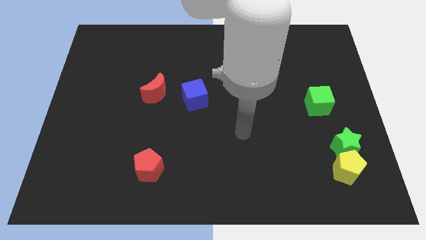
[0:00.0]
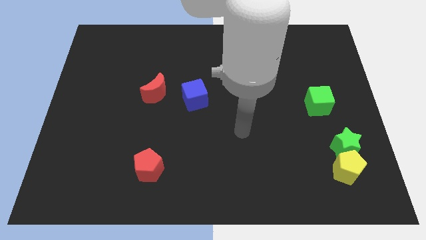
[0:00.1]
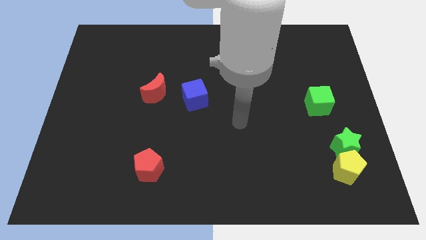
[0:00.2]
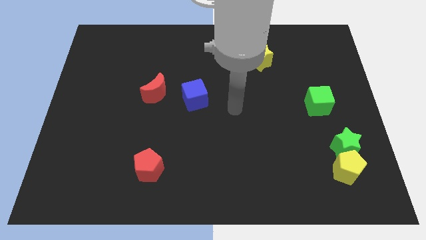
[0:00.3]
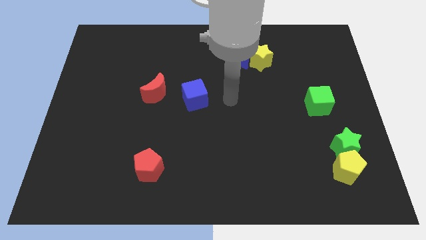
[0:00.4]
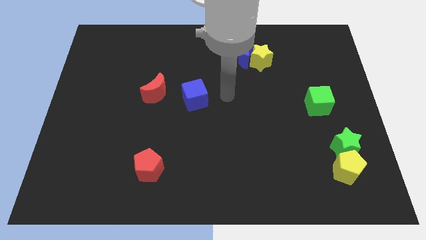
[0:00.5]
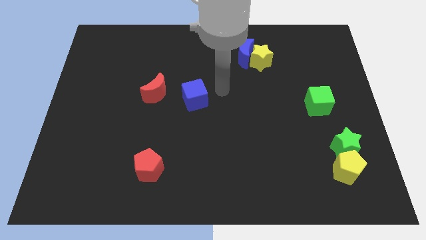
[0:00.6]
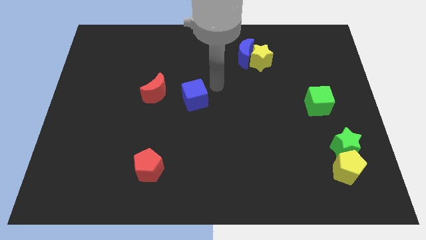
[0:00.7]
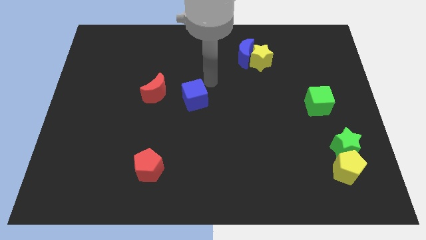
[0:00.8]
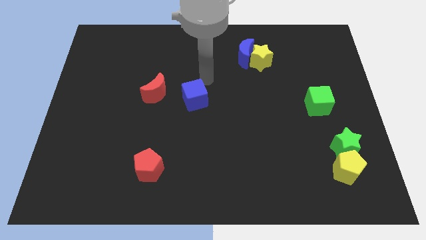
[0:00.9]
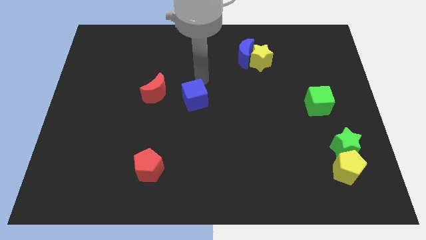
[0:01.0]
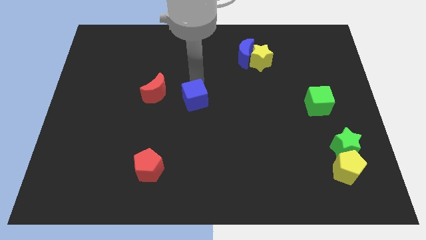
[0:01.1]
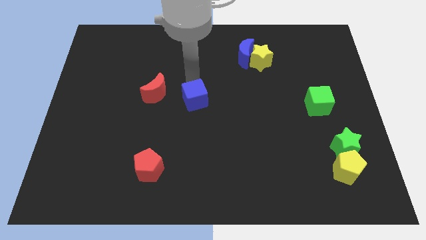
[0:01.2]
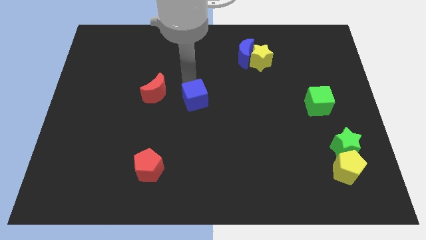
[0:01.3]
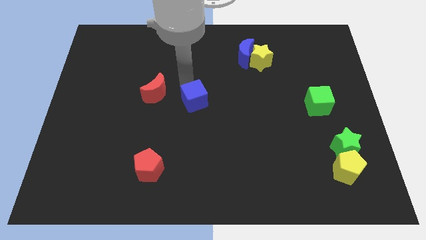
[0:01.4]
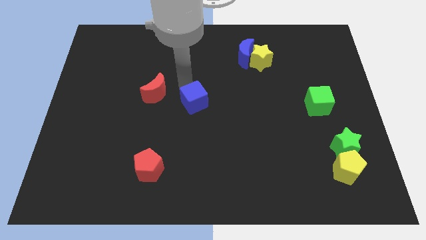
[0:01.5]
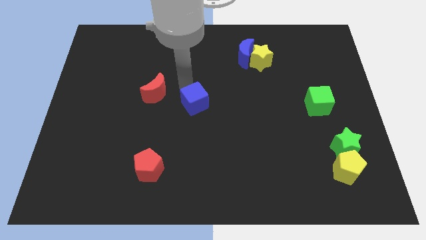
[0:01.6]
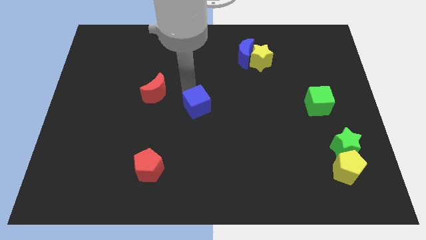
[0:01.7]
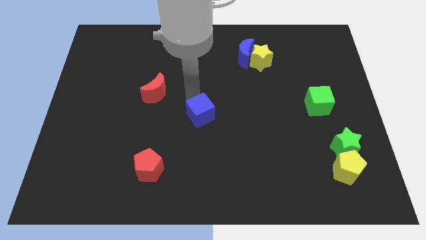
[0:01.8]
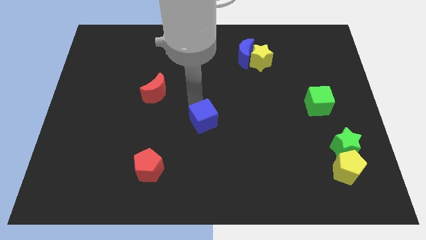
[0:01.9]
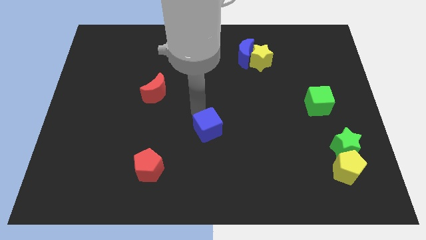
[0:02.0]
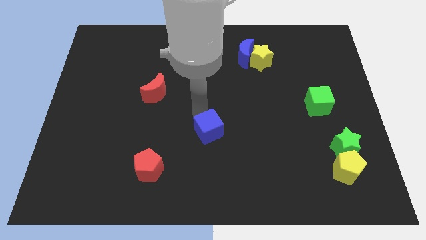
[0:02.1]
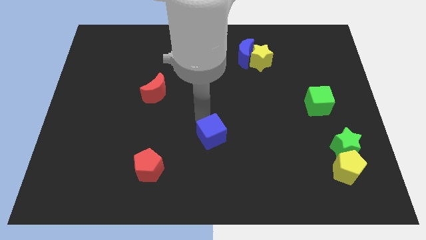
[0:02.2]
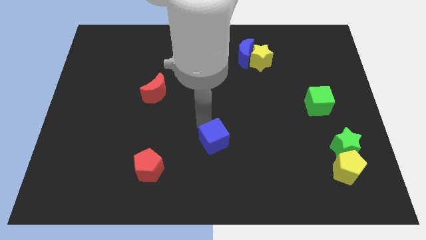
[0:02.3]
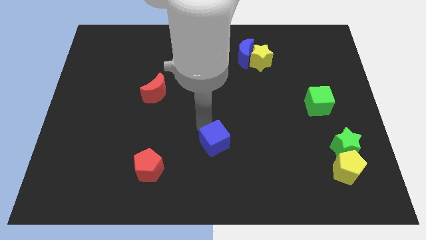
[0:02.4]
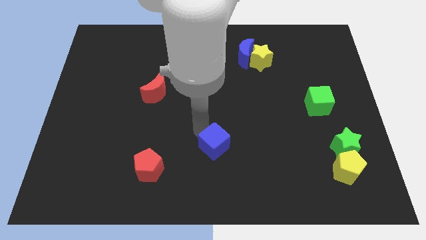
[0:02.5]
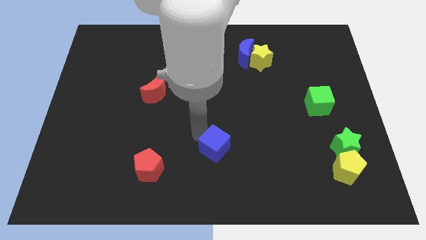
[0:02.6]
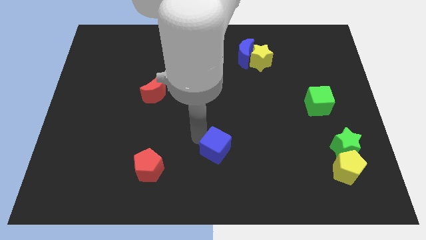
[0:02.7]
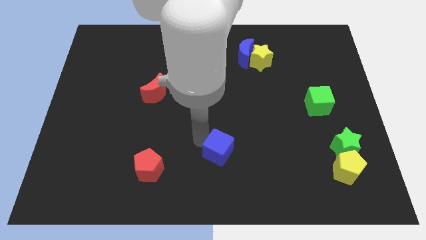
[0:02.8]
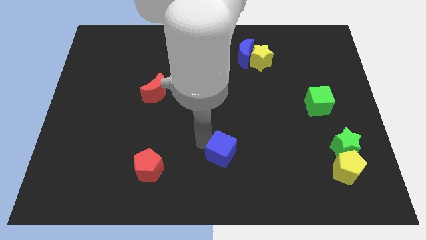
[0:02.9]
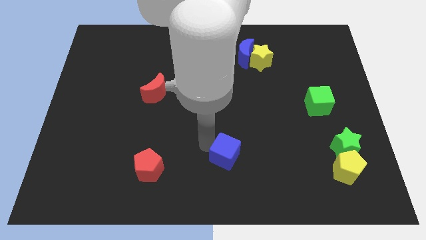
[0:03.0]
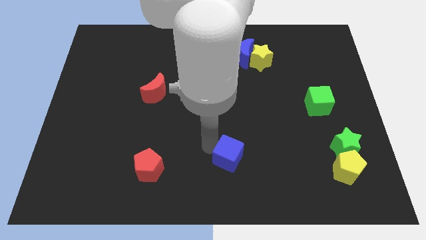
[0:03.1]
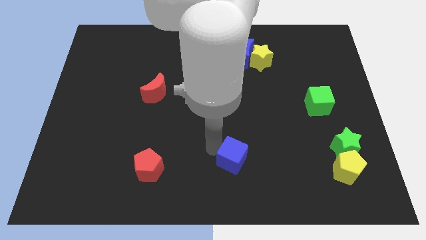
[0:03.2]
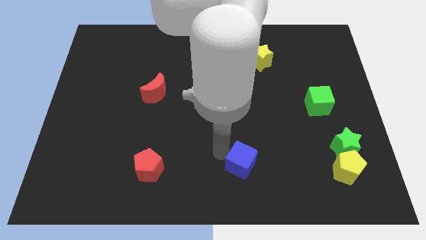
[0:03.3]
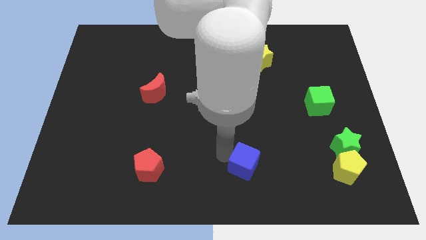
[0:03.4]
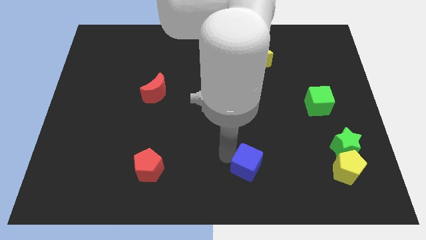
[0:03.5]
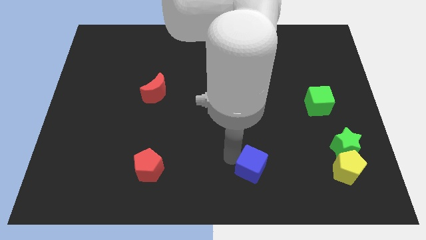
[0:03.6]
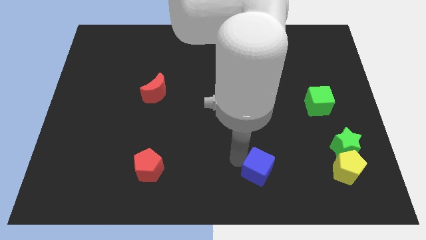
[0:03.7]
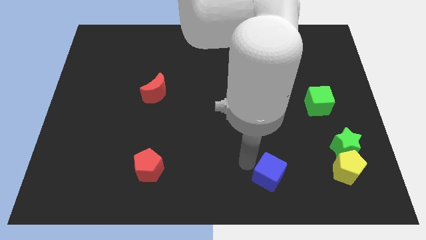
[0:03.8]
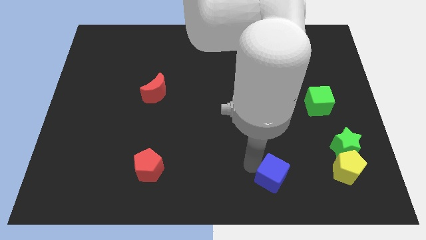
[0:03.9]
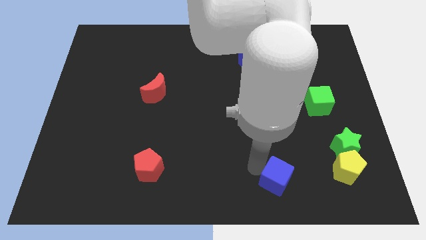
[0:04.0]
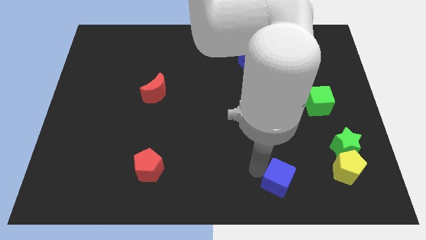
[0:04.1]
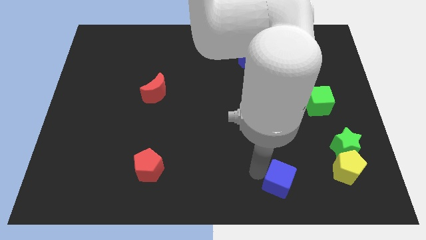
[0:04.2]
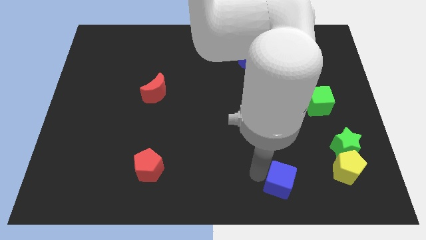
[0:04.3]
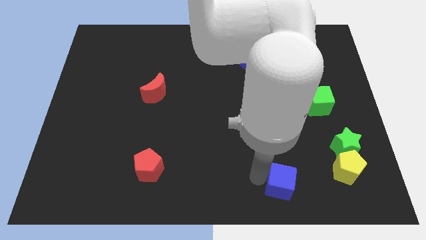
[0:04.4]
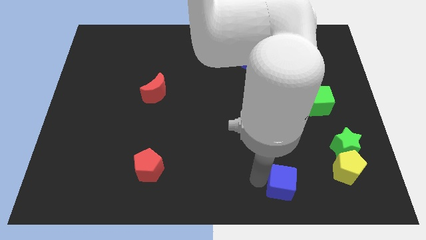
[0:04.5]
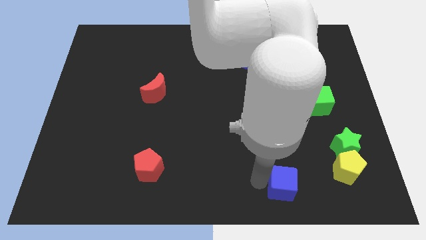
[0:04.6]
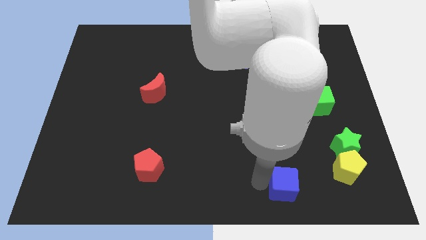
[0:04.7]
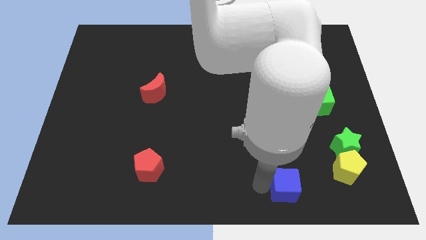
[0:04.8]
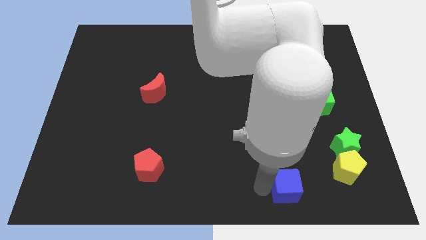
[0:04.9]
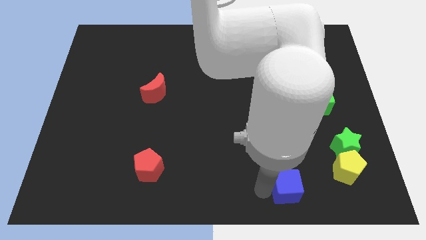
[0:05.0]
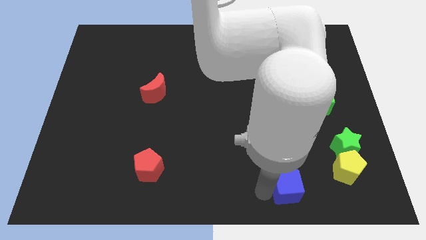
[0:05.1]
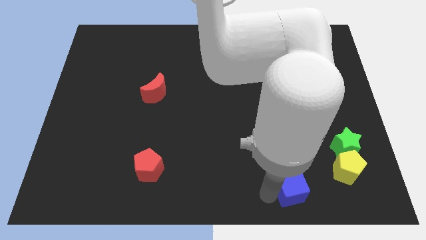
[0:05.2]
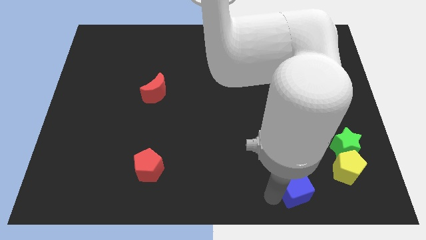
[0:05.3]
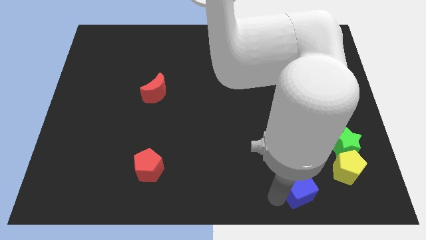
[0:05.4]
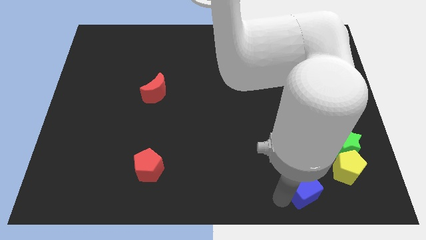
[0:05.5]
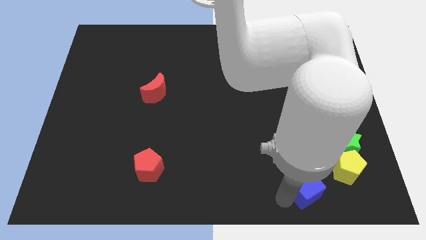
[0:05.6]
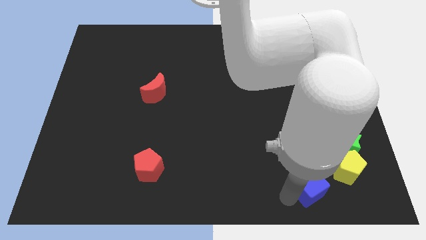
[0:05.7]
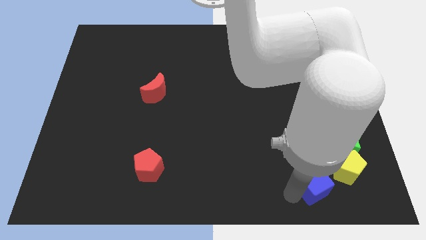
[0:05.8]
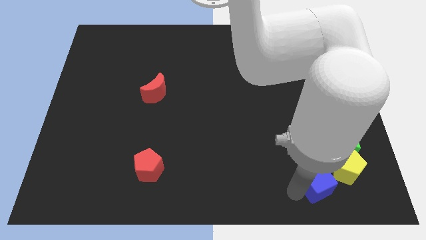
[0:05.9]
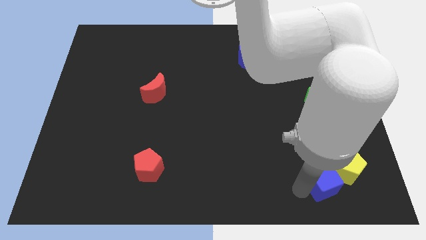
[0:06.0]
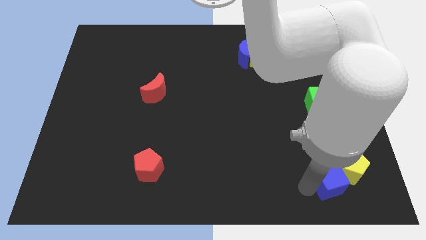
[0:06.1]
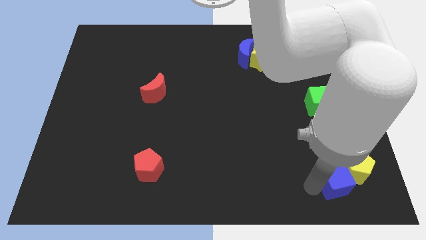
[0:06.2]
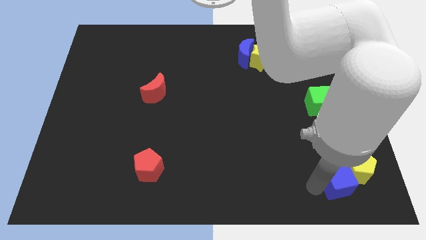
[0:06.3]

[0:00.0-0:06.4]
move the blue cube to the yellow pentagon

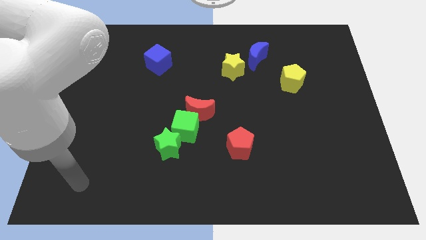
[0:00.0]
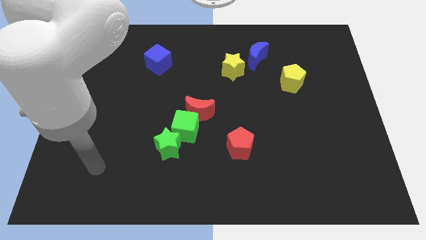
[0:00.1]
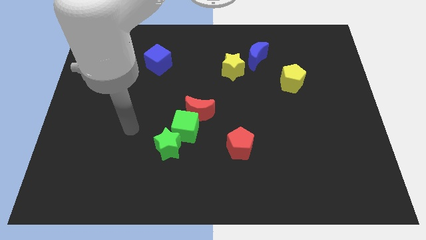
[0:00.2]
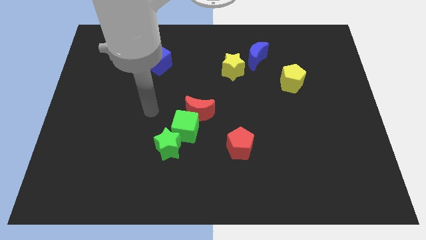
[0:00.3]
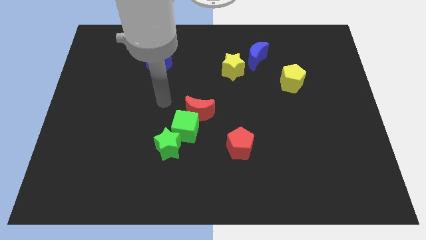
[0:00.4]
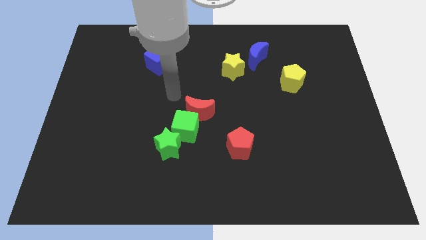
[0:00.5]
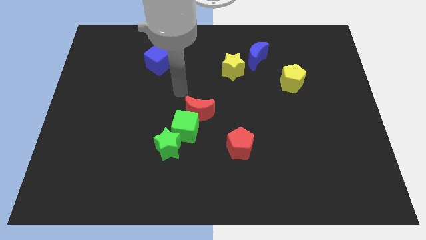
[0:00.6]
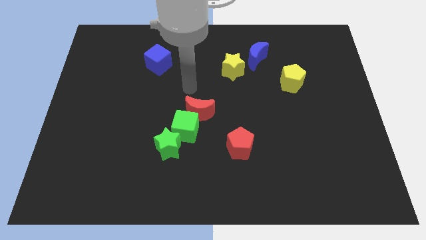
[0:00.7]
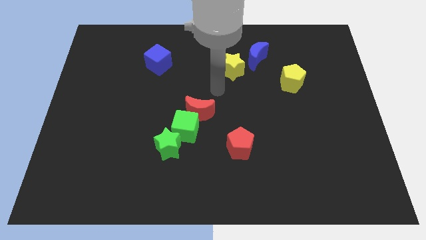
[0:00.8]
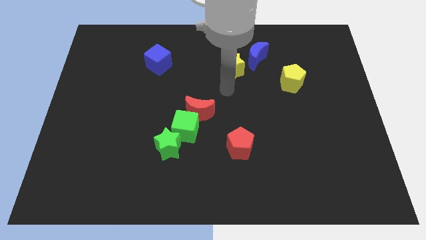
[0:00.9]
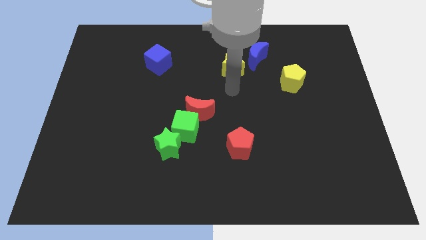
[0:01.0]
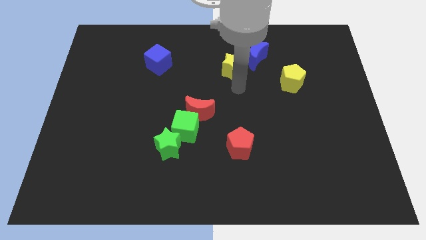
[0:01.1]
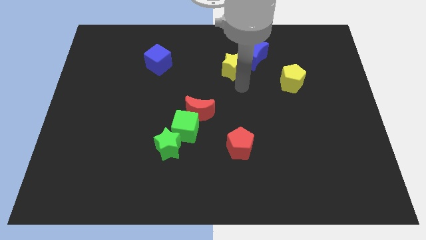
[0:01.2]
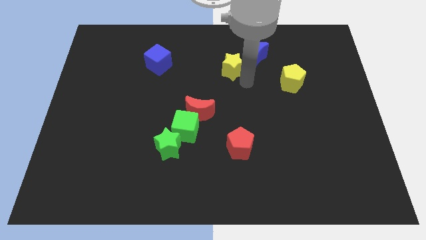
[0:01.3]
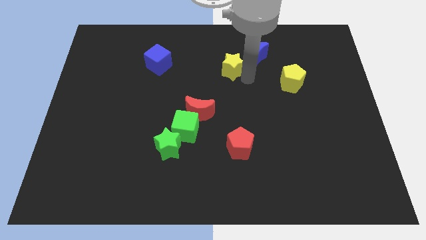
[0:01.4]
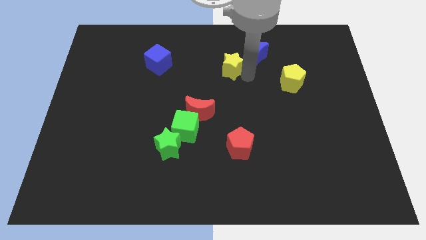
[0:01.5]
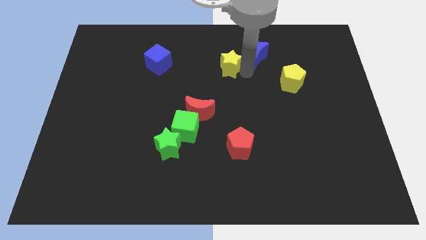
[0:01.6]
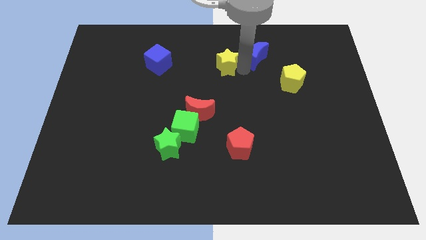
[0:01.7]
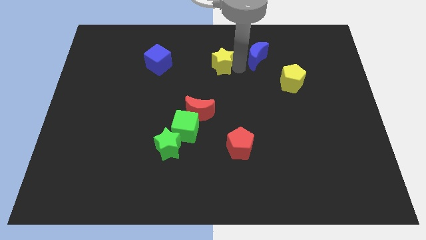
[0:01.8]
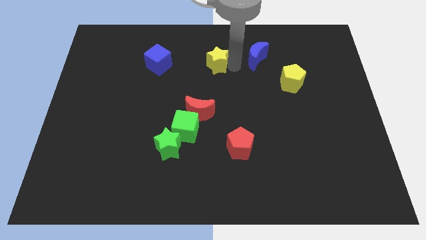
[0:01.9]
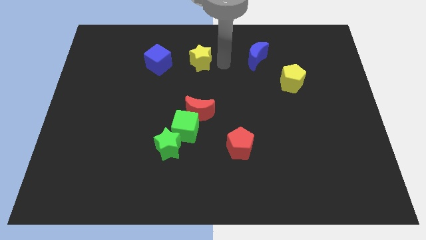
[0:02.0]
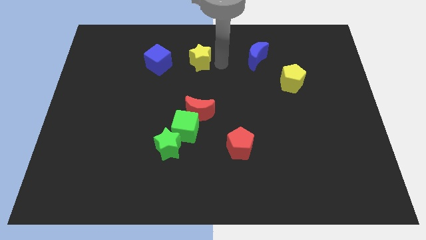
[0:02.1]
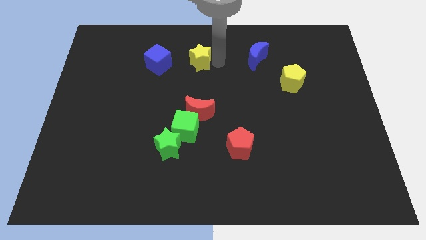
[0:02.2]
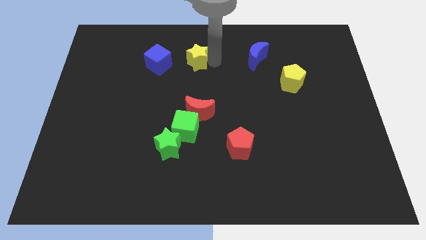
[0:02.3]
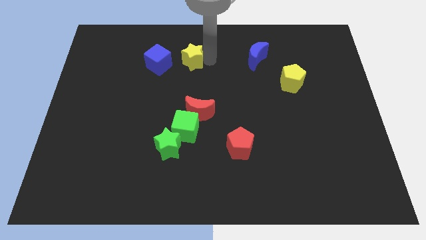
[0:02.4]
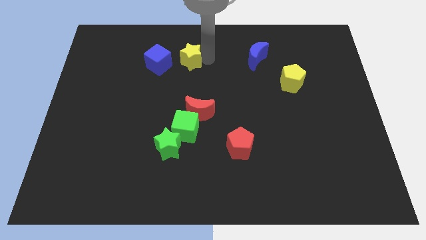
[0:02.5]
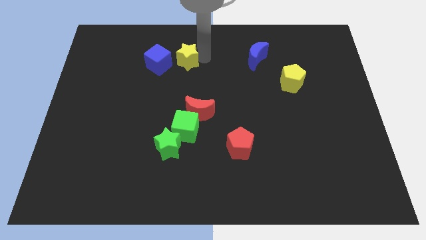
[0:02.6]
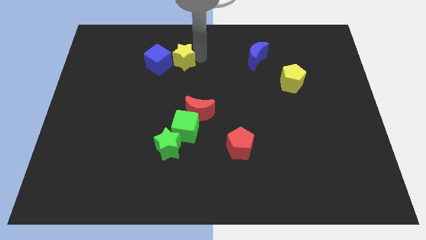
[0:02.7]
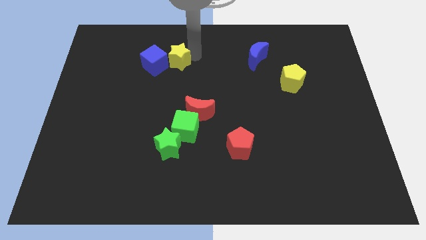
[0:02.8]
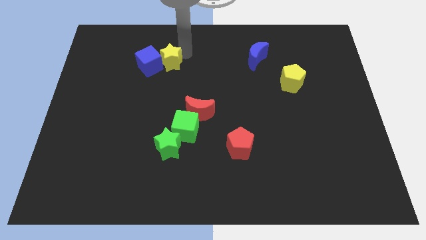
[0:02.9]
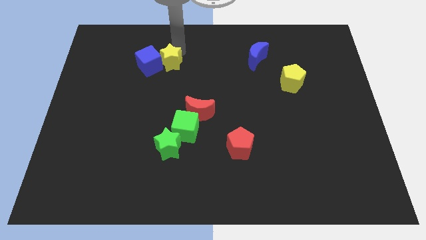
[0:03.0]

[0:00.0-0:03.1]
slide the yellow star to the blue cube
